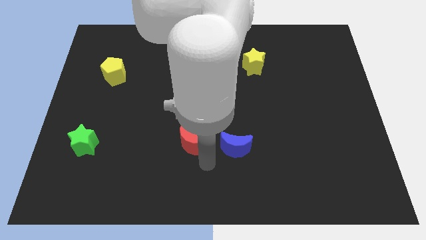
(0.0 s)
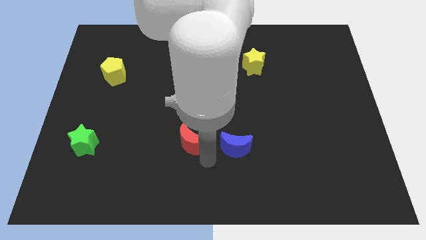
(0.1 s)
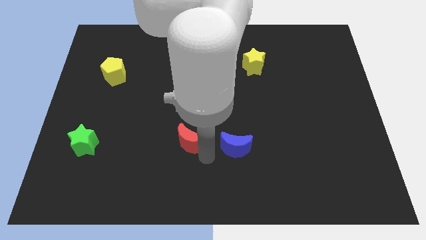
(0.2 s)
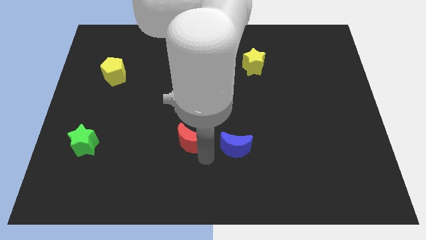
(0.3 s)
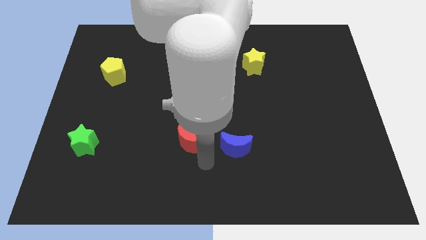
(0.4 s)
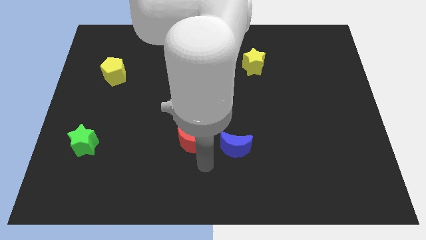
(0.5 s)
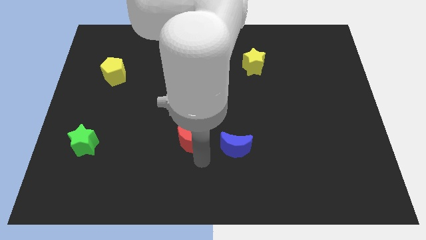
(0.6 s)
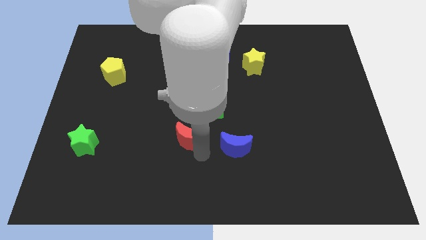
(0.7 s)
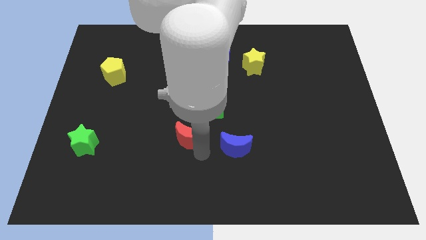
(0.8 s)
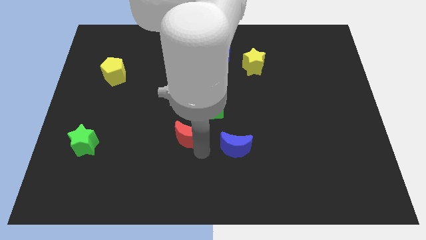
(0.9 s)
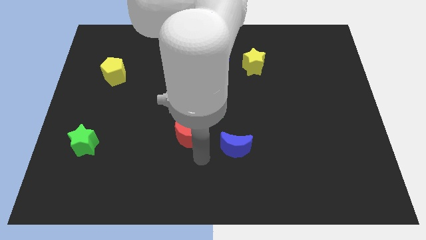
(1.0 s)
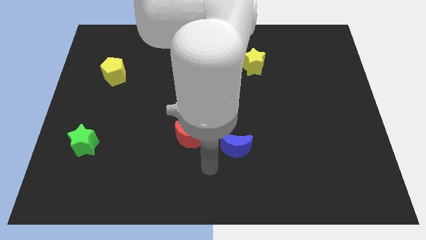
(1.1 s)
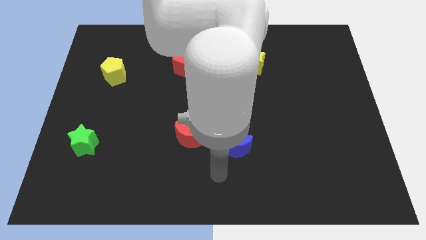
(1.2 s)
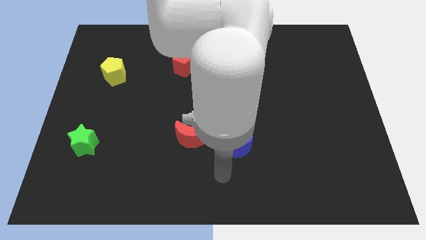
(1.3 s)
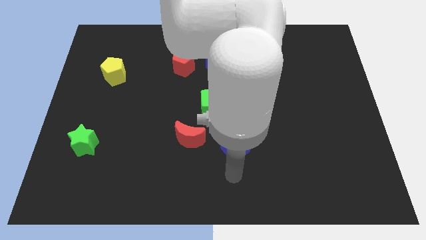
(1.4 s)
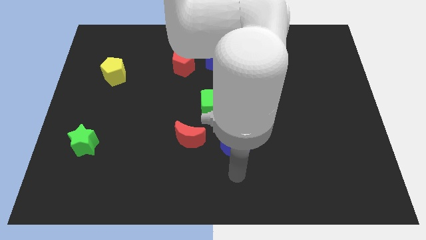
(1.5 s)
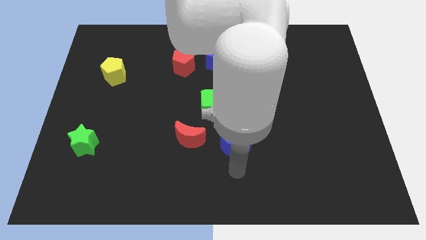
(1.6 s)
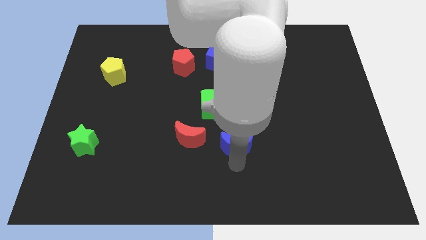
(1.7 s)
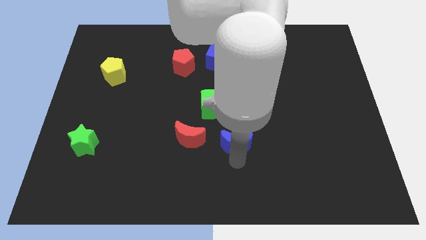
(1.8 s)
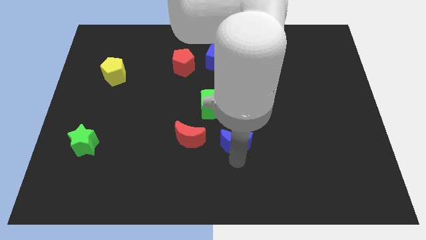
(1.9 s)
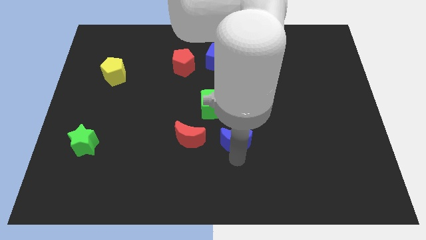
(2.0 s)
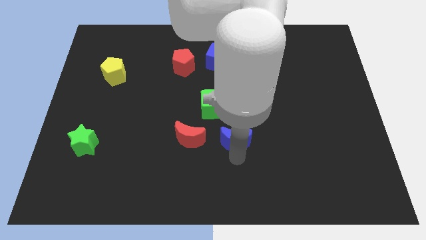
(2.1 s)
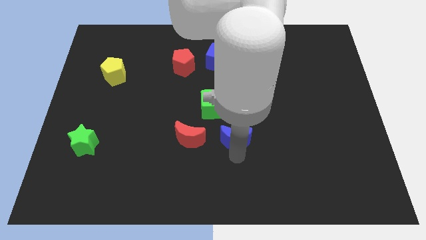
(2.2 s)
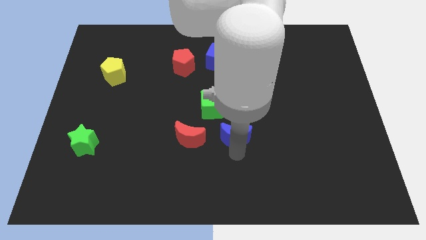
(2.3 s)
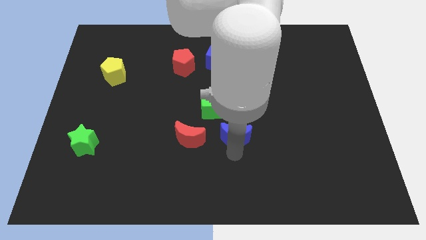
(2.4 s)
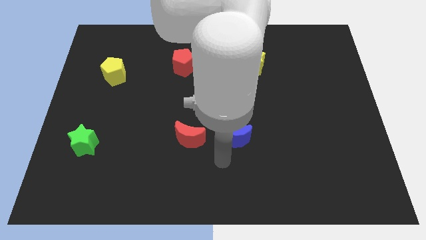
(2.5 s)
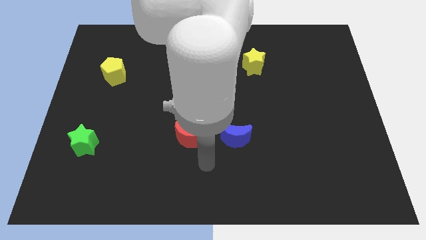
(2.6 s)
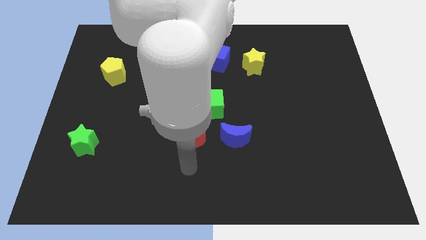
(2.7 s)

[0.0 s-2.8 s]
adjust the blue and red moons parallel below the green cube

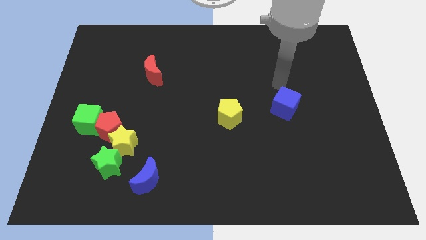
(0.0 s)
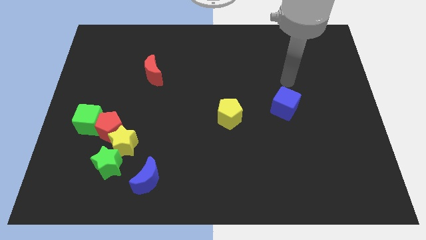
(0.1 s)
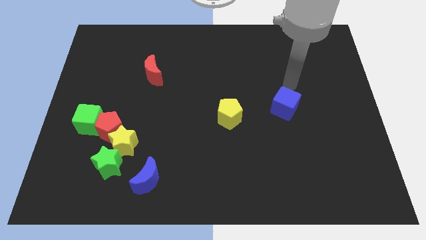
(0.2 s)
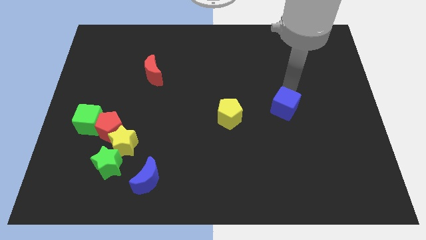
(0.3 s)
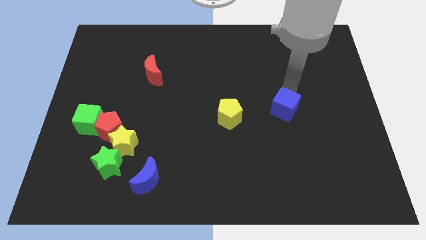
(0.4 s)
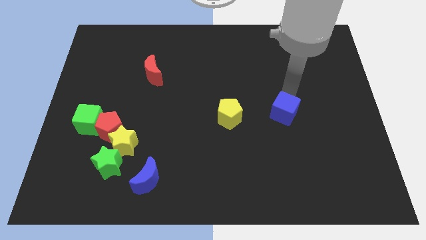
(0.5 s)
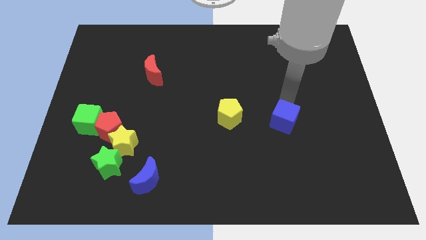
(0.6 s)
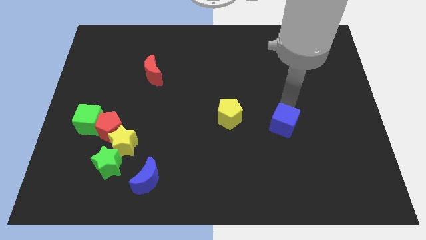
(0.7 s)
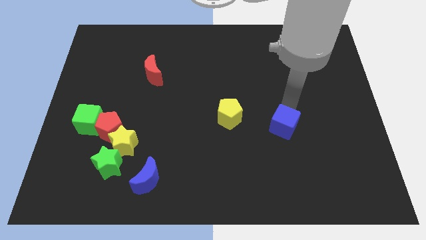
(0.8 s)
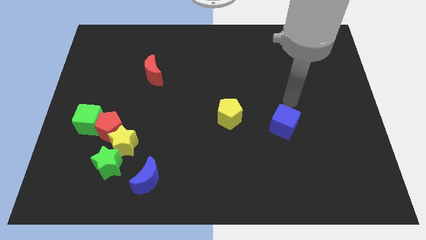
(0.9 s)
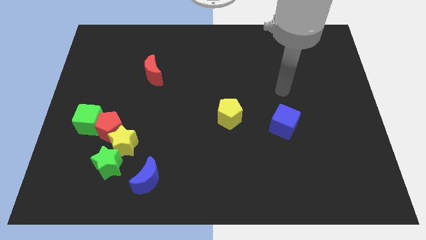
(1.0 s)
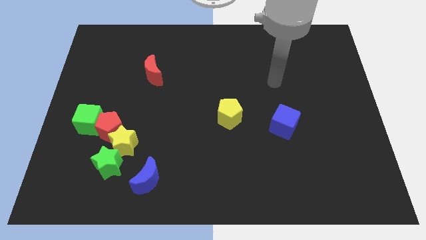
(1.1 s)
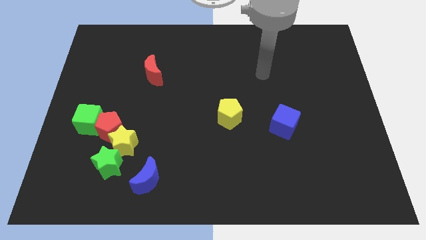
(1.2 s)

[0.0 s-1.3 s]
push the blue cube slightly towards down

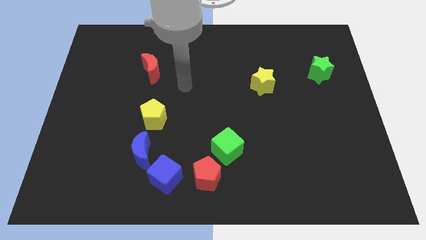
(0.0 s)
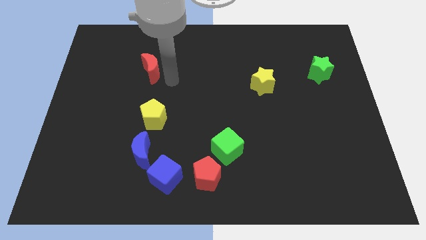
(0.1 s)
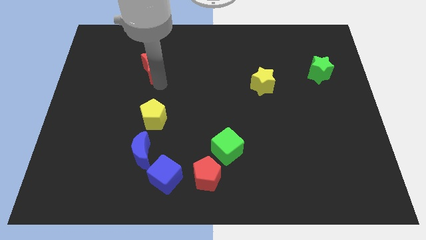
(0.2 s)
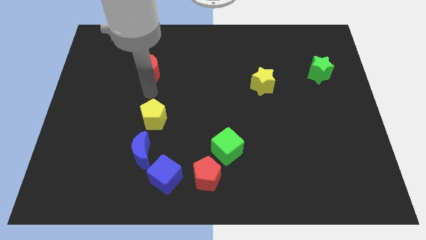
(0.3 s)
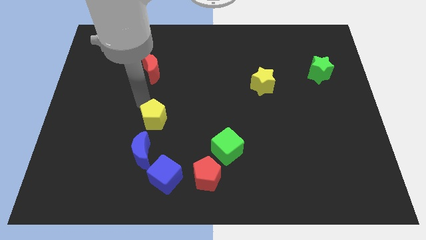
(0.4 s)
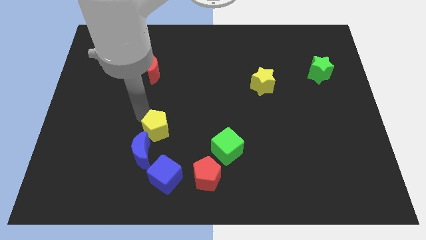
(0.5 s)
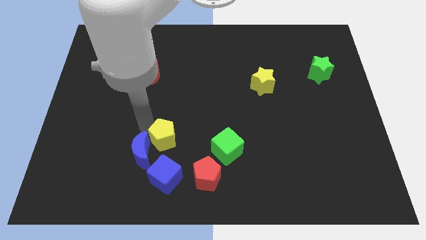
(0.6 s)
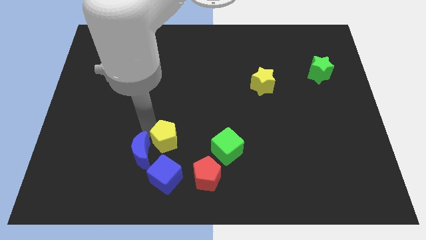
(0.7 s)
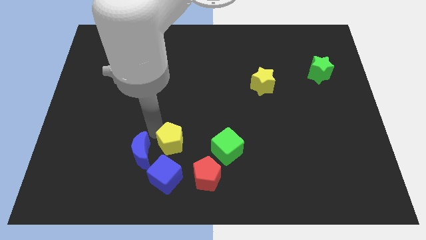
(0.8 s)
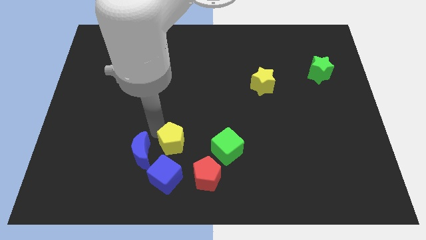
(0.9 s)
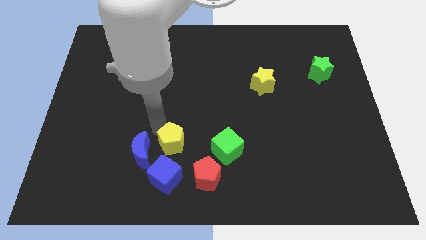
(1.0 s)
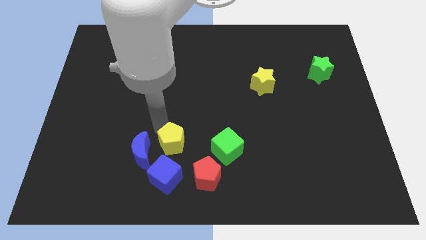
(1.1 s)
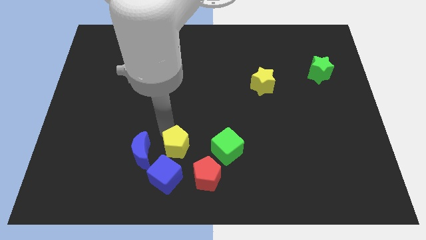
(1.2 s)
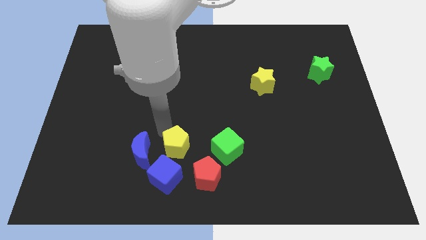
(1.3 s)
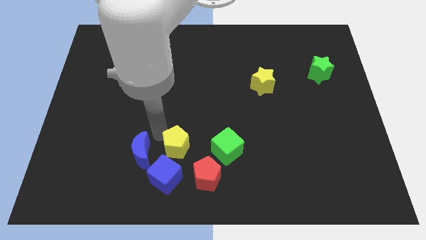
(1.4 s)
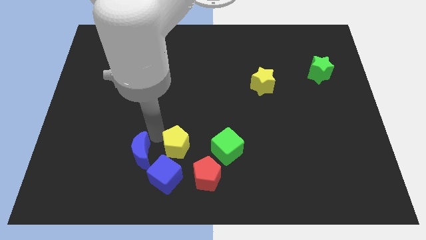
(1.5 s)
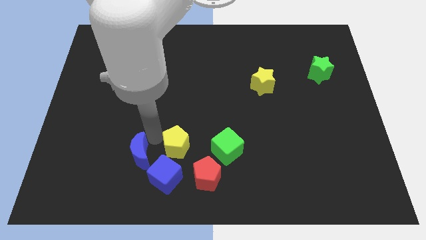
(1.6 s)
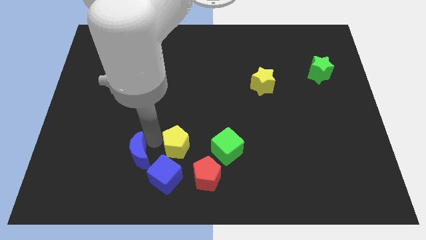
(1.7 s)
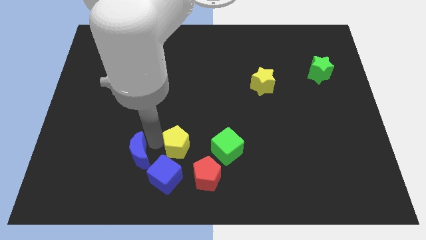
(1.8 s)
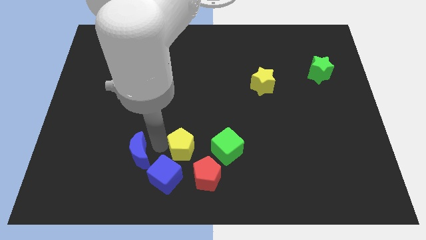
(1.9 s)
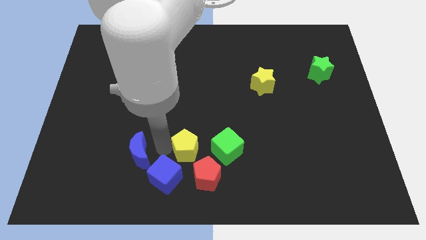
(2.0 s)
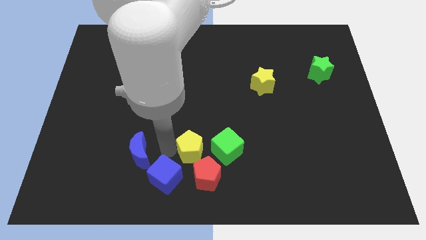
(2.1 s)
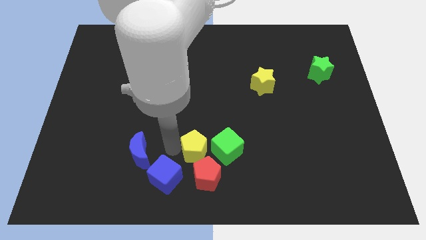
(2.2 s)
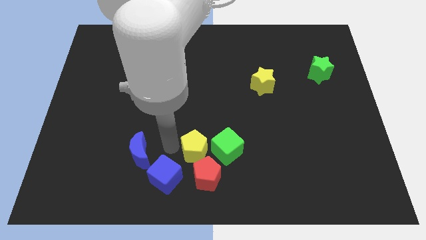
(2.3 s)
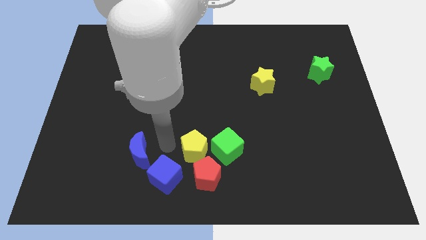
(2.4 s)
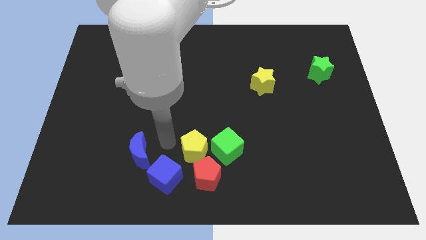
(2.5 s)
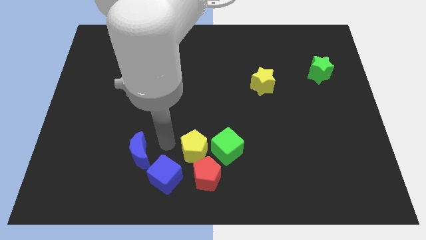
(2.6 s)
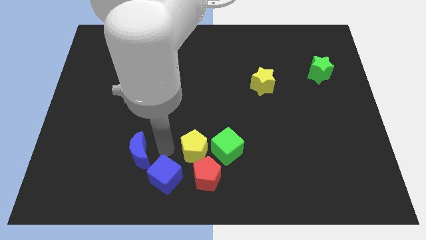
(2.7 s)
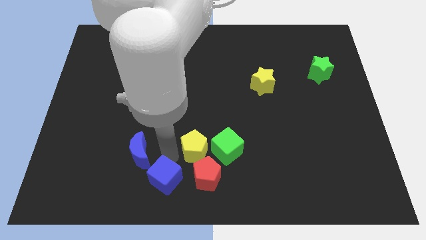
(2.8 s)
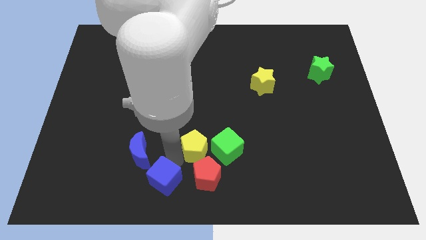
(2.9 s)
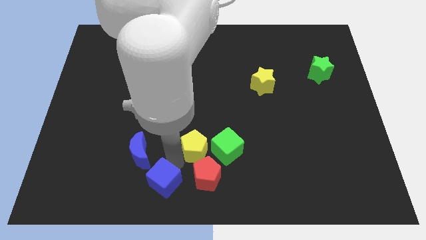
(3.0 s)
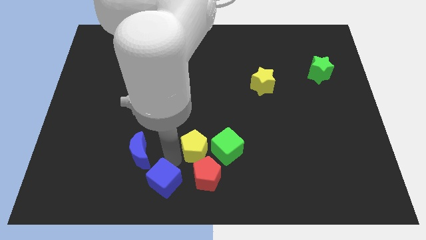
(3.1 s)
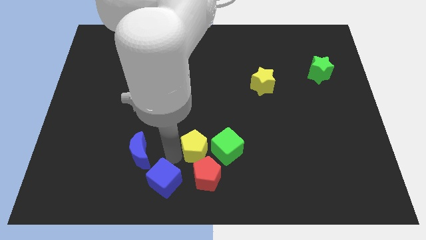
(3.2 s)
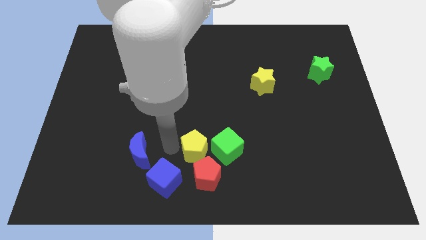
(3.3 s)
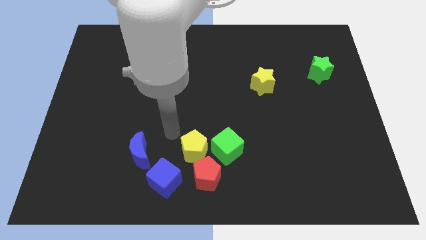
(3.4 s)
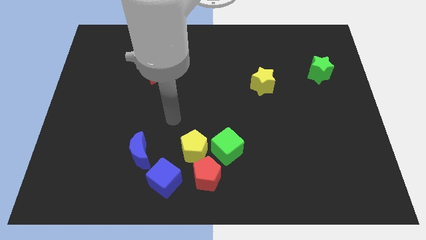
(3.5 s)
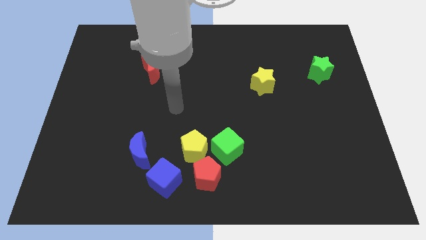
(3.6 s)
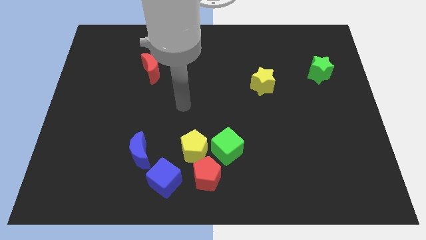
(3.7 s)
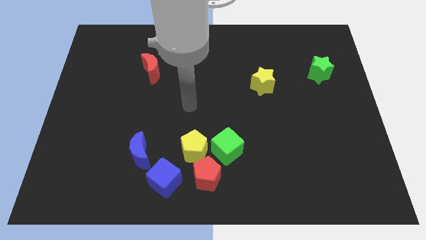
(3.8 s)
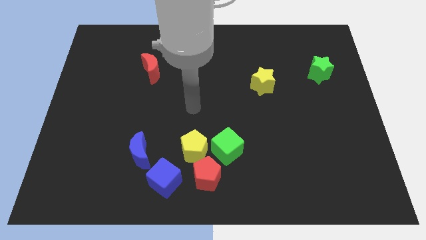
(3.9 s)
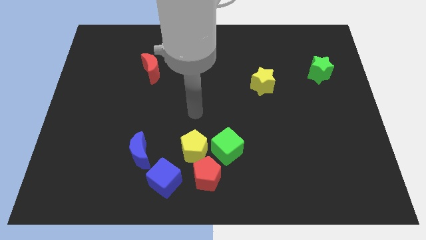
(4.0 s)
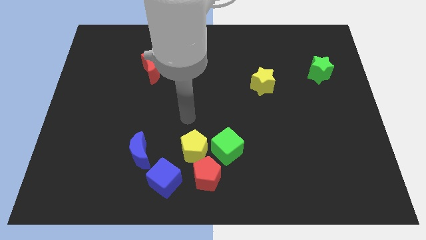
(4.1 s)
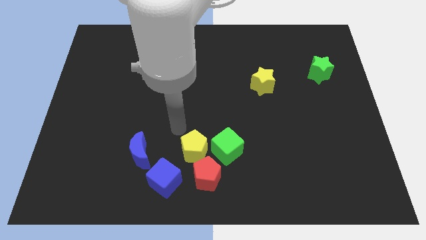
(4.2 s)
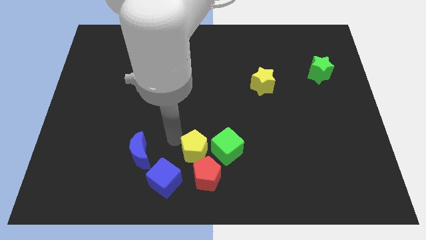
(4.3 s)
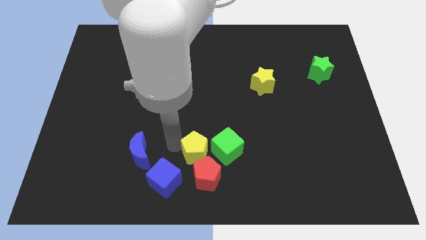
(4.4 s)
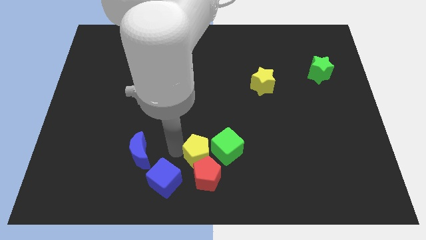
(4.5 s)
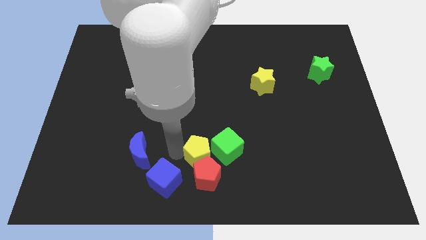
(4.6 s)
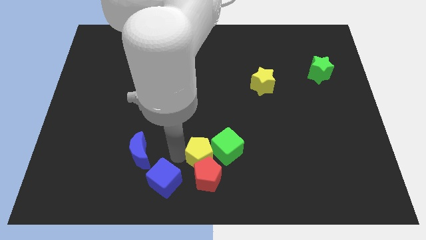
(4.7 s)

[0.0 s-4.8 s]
push the yellow pentagon into the red pentagon

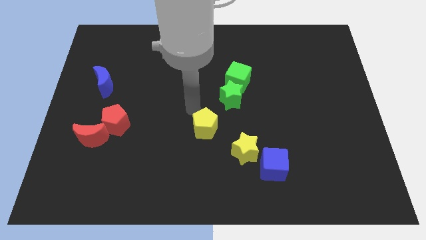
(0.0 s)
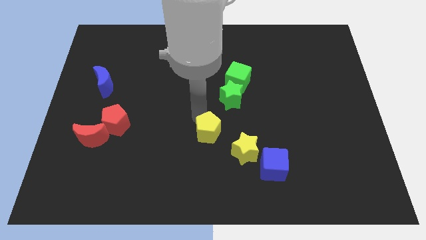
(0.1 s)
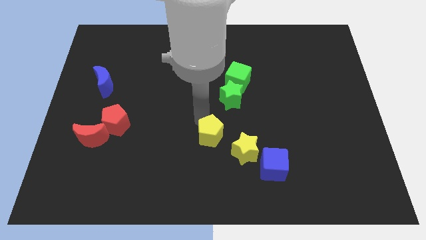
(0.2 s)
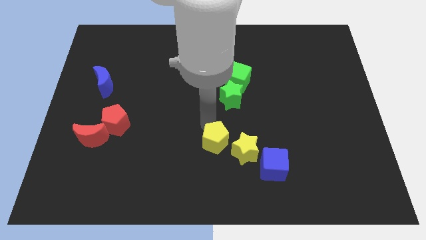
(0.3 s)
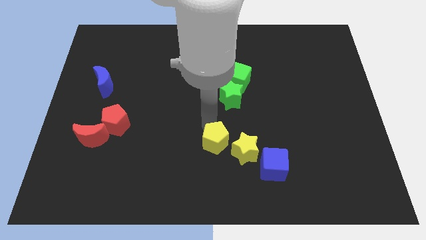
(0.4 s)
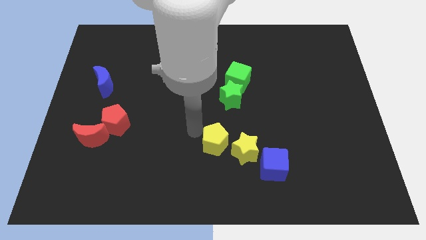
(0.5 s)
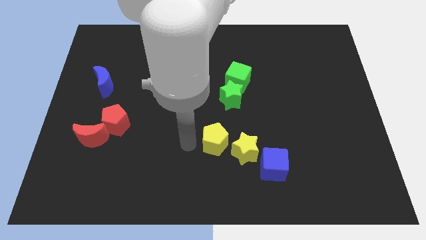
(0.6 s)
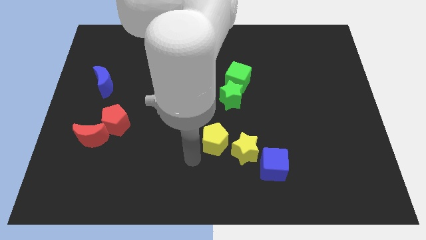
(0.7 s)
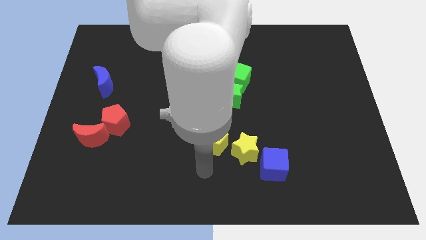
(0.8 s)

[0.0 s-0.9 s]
move the yellow pentagon towards the bottom center of the board
